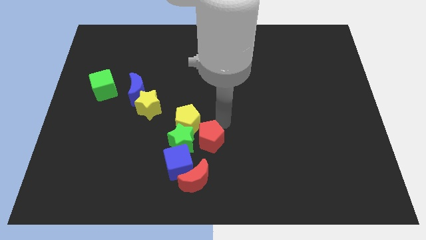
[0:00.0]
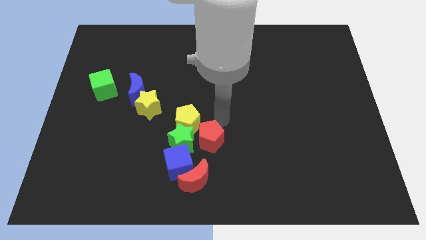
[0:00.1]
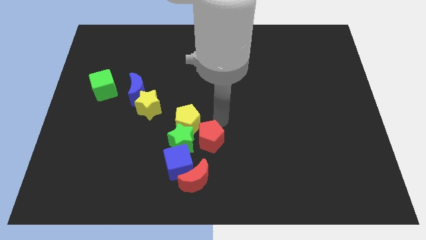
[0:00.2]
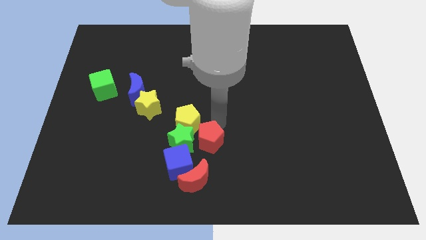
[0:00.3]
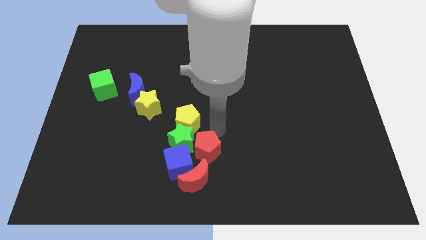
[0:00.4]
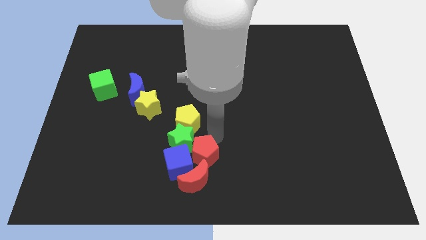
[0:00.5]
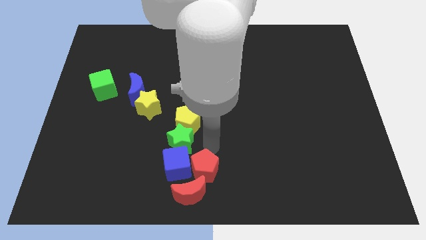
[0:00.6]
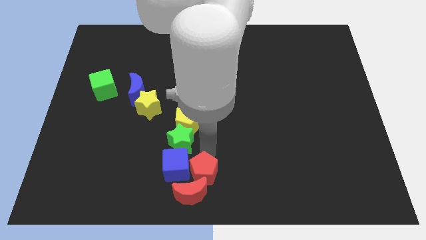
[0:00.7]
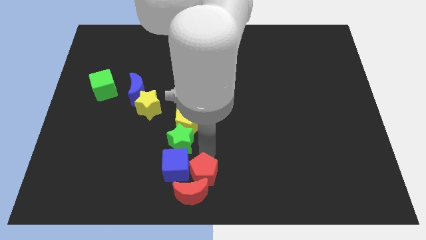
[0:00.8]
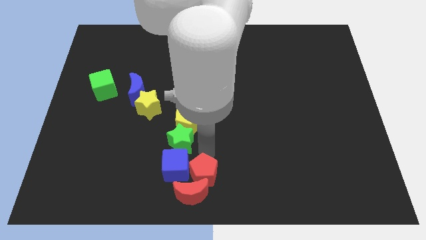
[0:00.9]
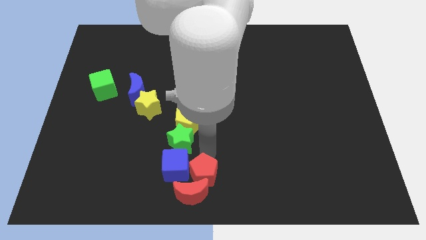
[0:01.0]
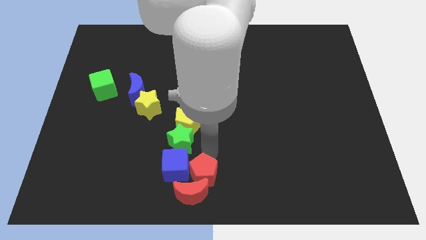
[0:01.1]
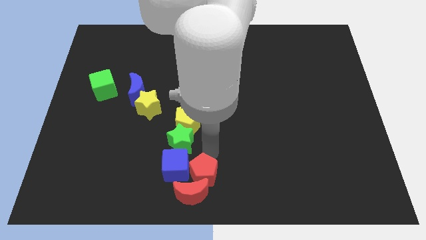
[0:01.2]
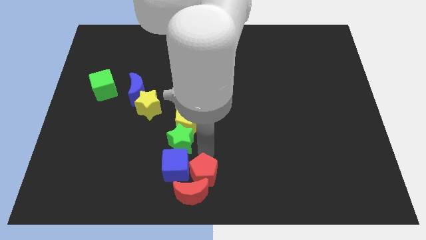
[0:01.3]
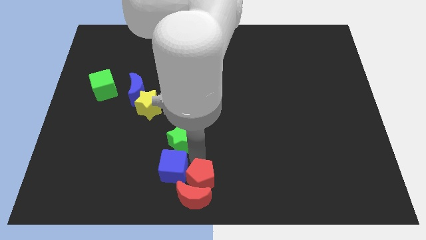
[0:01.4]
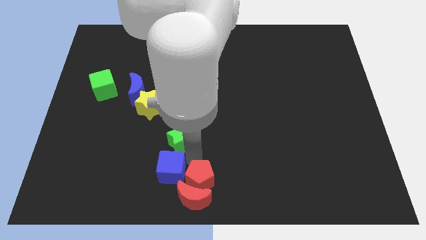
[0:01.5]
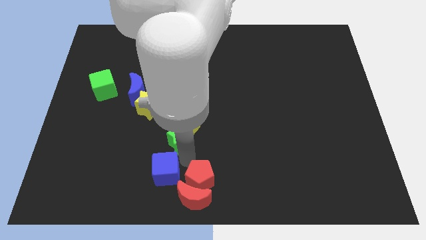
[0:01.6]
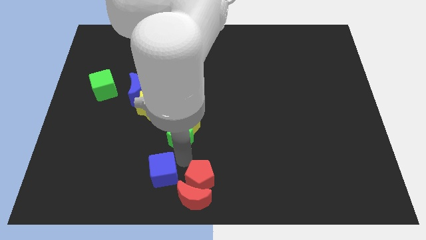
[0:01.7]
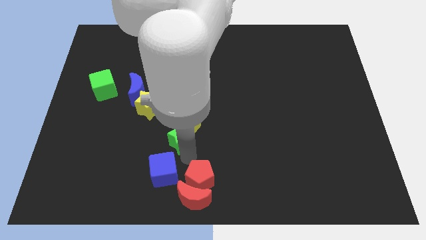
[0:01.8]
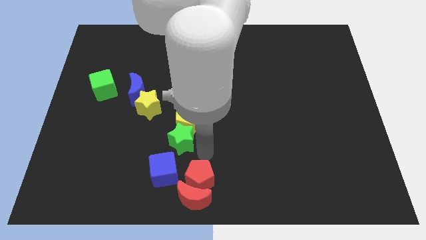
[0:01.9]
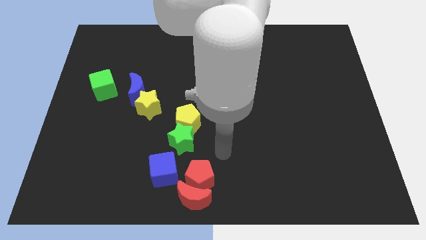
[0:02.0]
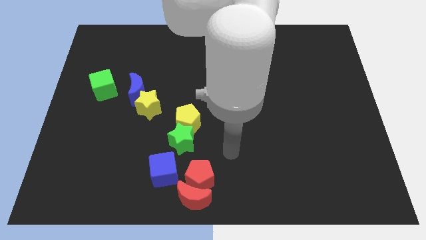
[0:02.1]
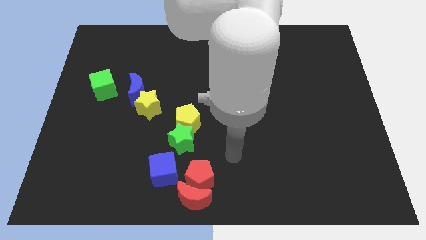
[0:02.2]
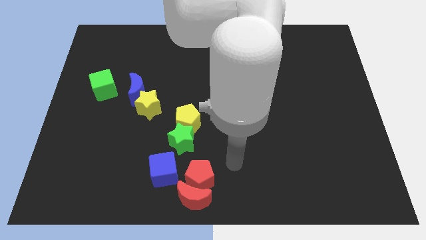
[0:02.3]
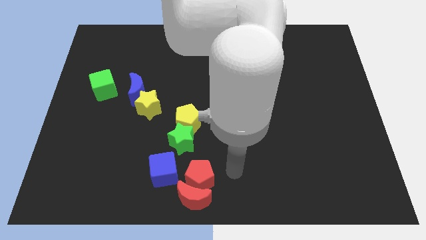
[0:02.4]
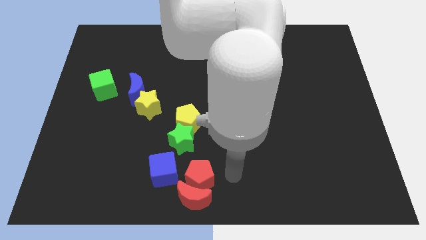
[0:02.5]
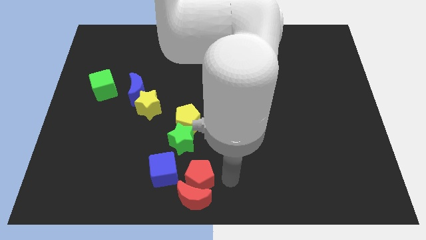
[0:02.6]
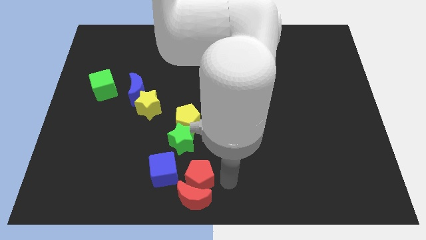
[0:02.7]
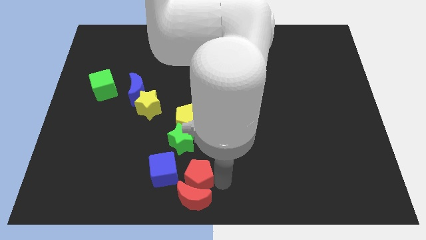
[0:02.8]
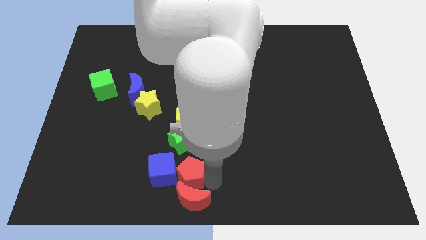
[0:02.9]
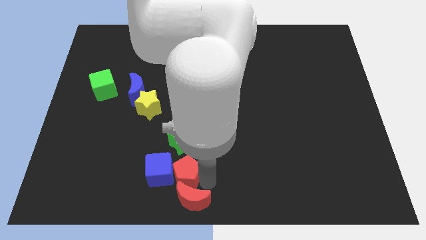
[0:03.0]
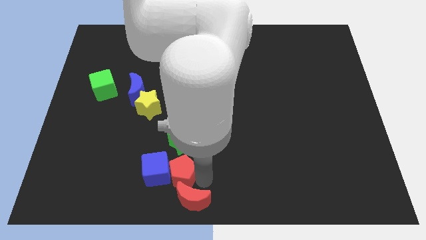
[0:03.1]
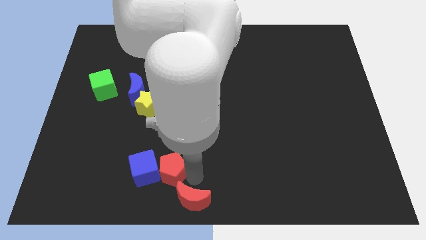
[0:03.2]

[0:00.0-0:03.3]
push the red pentagon into the blue cube

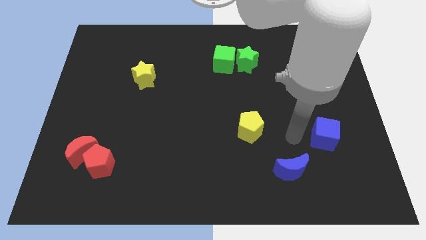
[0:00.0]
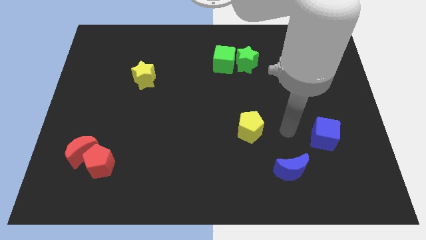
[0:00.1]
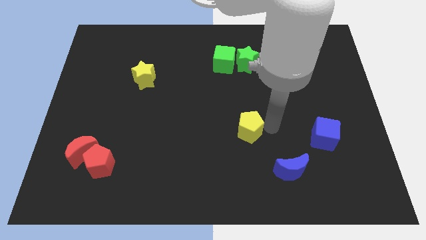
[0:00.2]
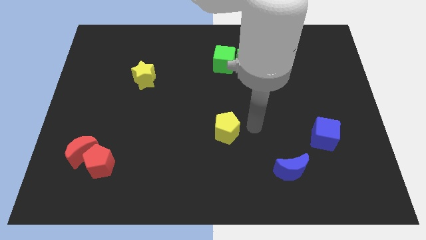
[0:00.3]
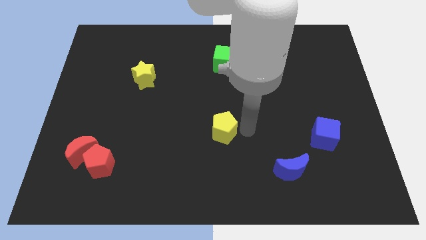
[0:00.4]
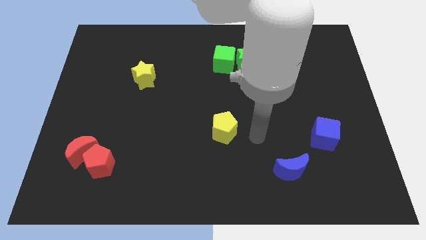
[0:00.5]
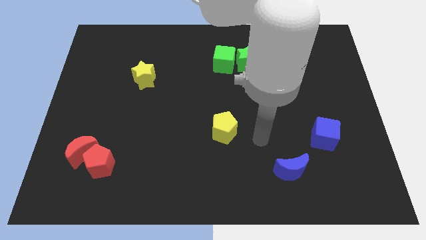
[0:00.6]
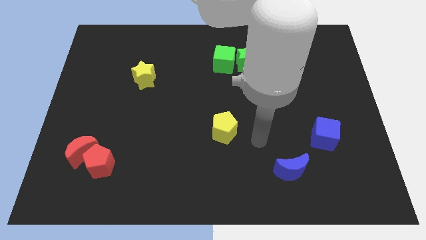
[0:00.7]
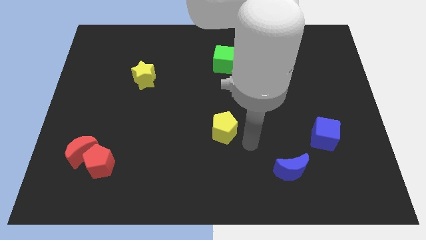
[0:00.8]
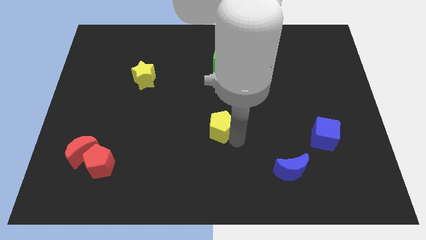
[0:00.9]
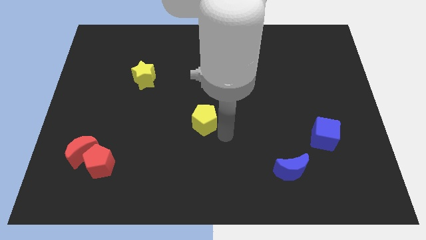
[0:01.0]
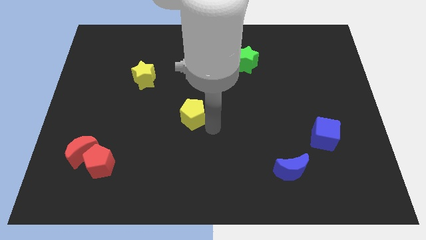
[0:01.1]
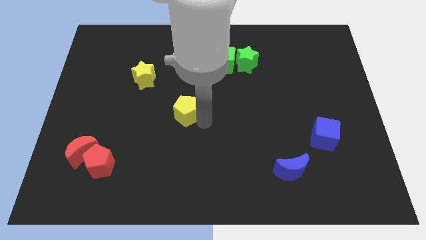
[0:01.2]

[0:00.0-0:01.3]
put the yellow pentagon at the center of the board

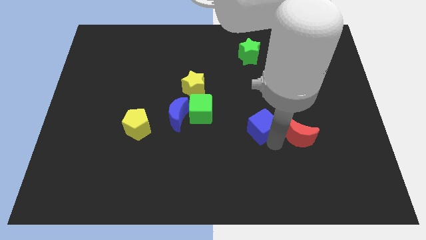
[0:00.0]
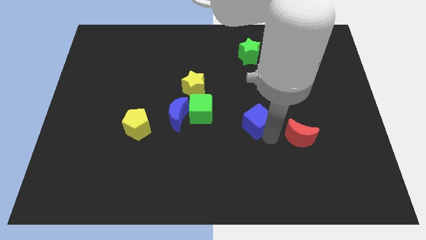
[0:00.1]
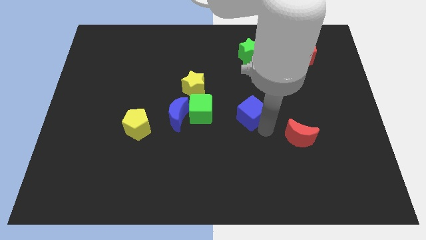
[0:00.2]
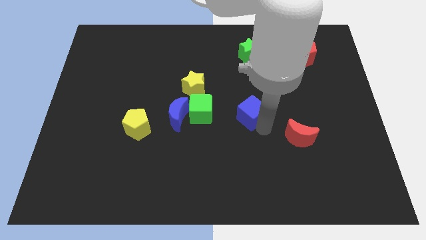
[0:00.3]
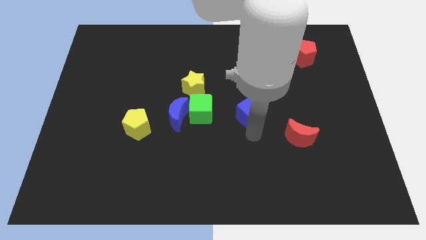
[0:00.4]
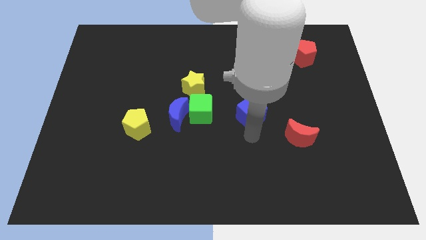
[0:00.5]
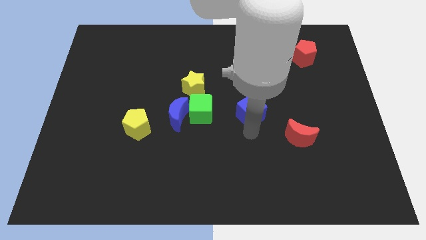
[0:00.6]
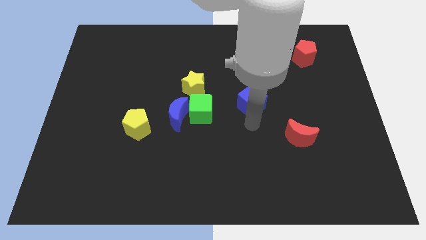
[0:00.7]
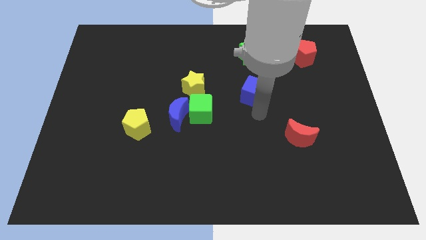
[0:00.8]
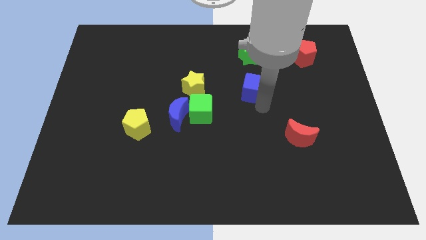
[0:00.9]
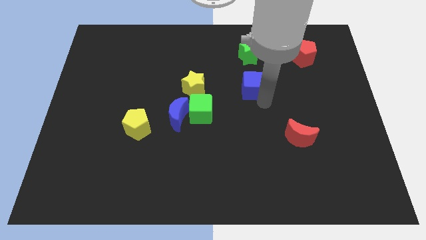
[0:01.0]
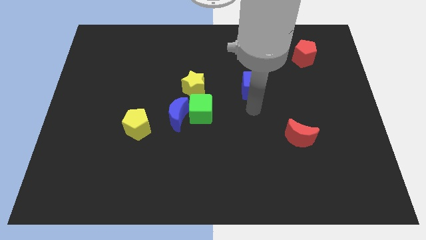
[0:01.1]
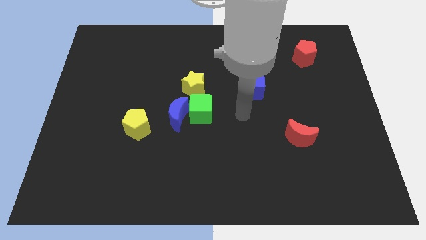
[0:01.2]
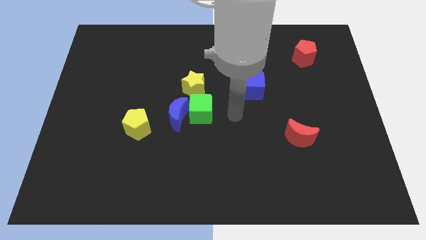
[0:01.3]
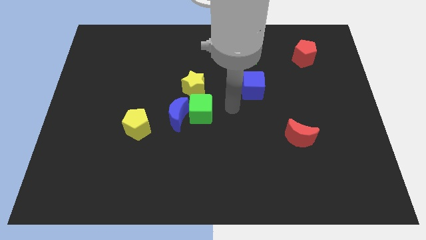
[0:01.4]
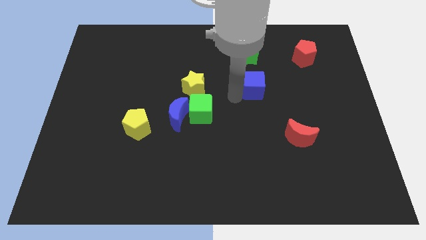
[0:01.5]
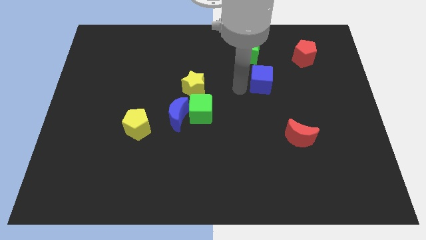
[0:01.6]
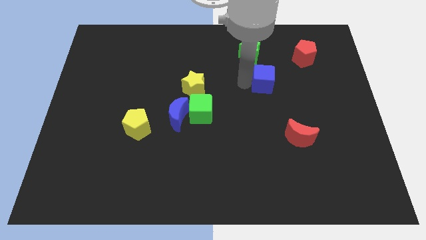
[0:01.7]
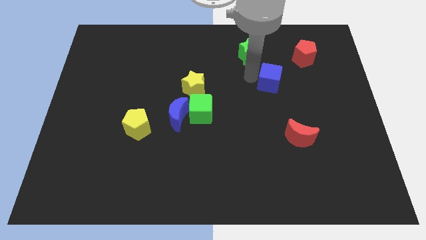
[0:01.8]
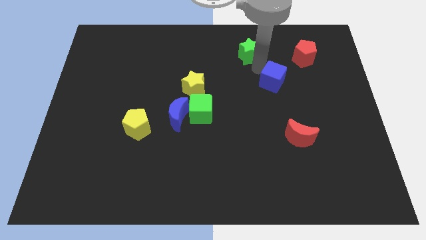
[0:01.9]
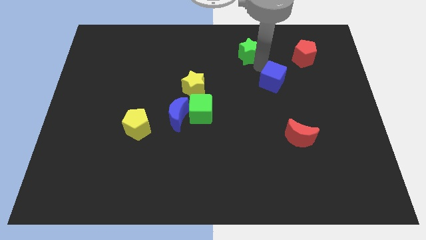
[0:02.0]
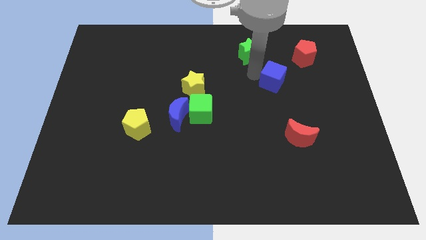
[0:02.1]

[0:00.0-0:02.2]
form a triangle with blue cube red pentagon and green star

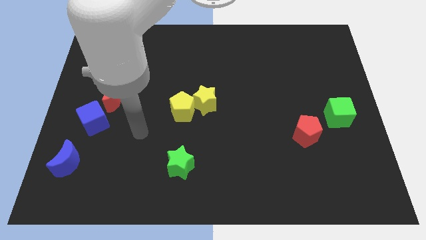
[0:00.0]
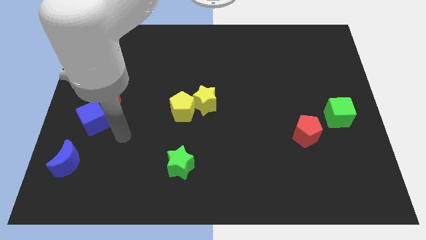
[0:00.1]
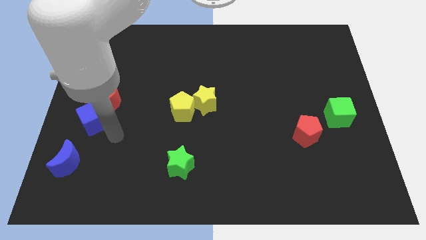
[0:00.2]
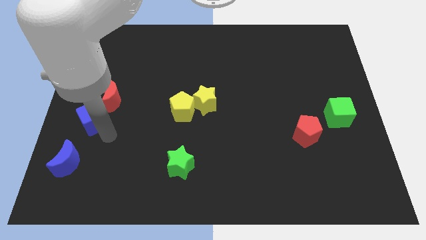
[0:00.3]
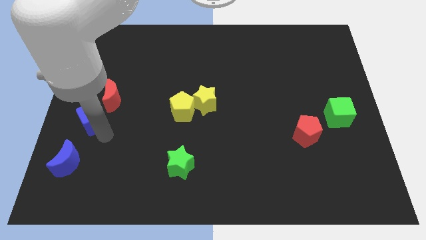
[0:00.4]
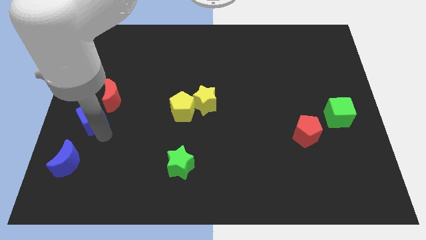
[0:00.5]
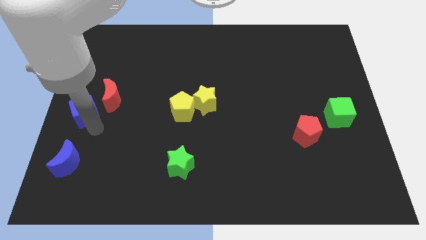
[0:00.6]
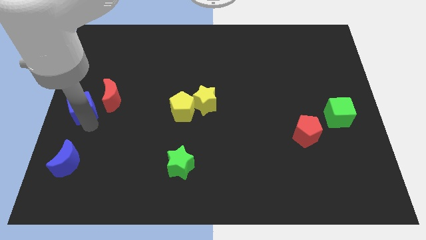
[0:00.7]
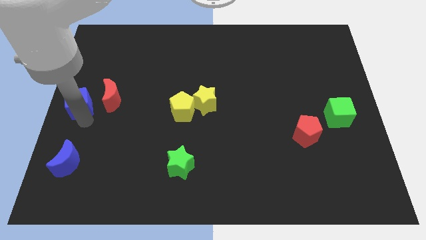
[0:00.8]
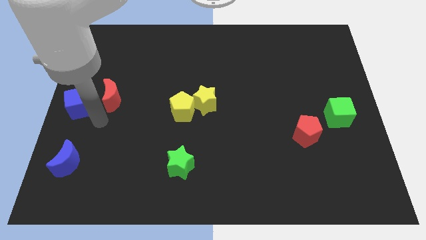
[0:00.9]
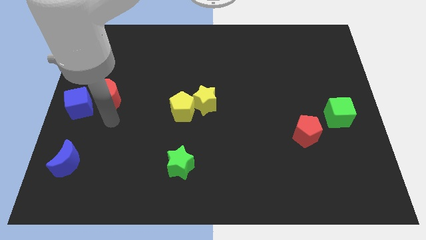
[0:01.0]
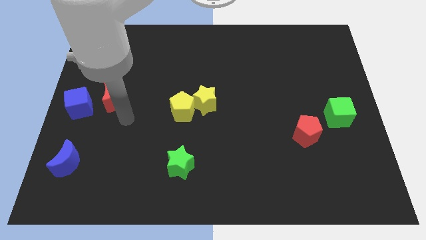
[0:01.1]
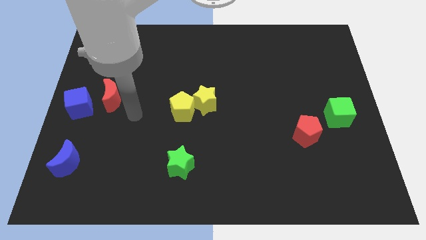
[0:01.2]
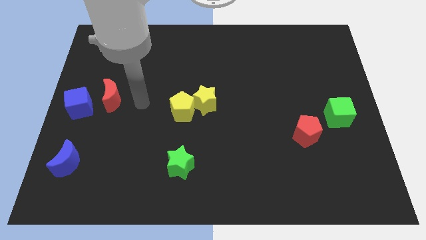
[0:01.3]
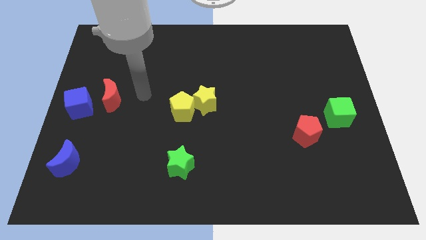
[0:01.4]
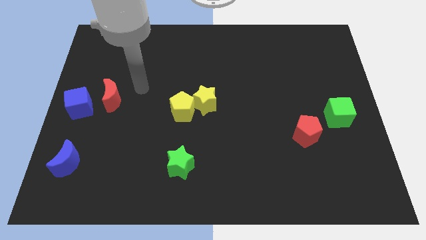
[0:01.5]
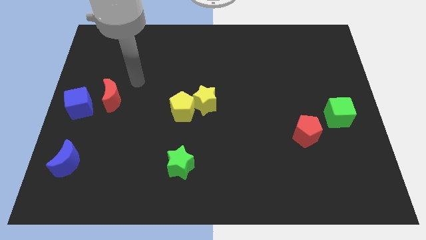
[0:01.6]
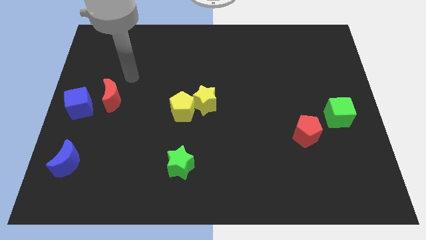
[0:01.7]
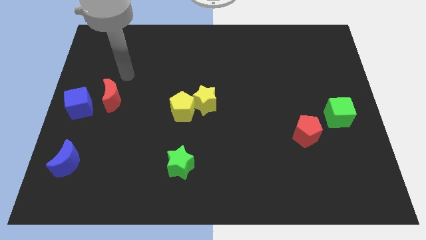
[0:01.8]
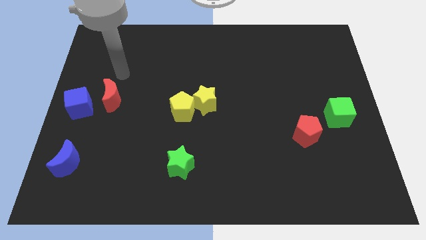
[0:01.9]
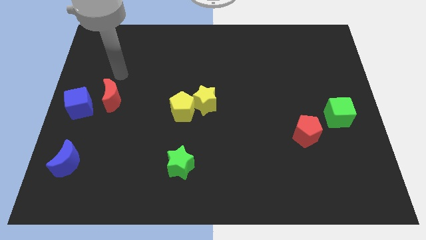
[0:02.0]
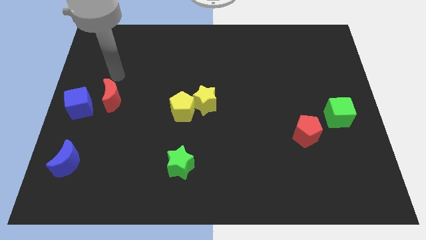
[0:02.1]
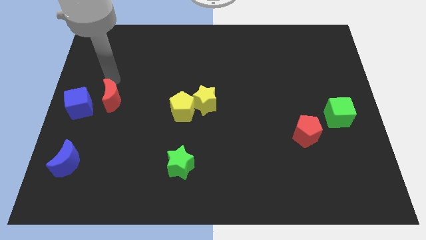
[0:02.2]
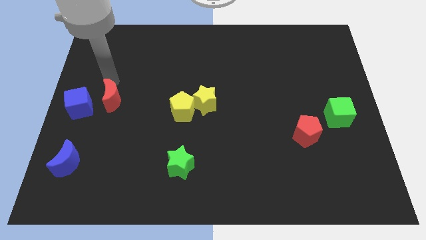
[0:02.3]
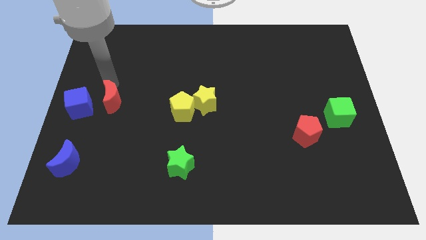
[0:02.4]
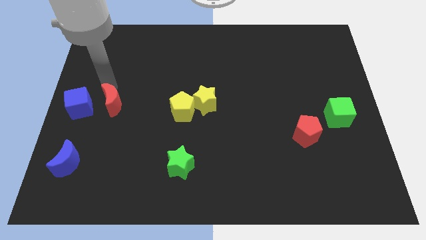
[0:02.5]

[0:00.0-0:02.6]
put the blue cube above the blue crescent
